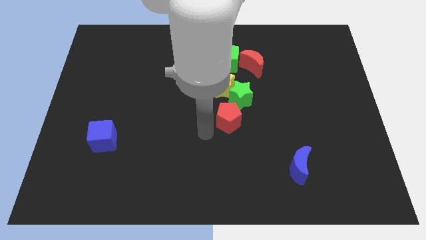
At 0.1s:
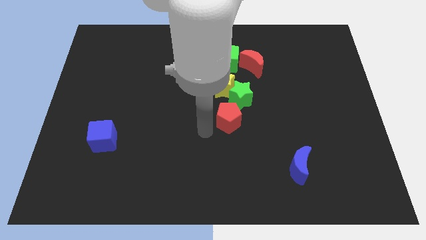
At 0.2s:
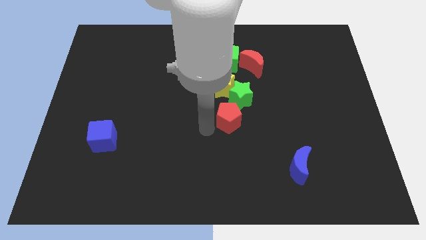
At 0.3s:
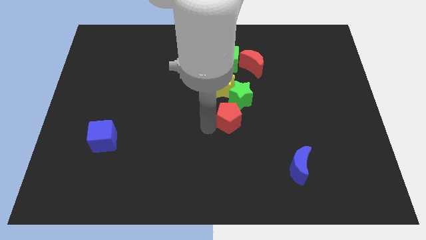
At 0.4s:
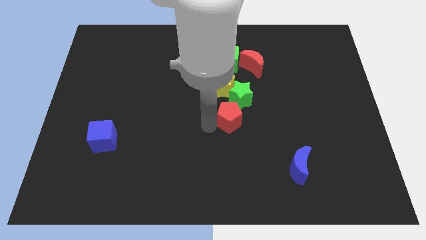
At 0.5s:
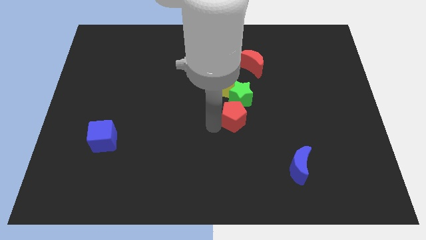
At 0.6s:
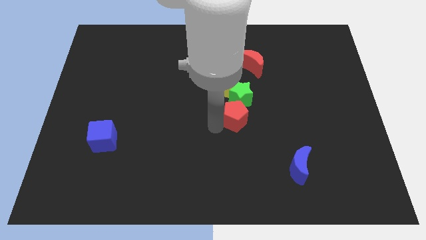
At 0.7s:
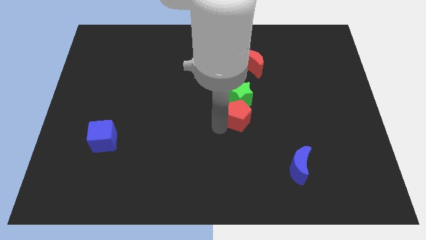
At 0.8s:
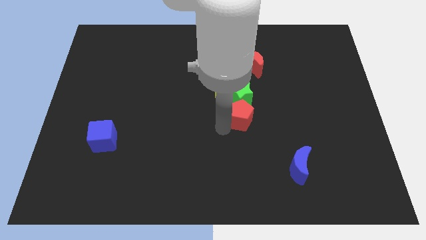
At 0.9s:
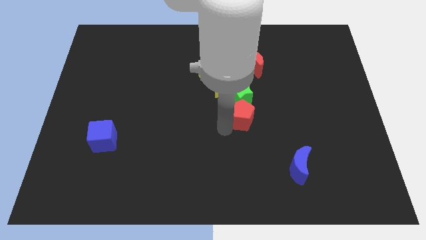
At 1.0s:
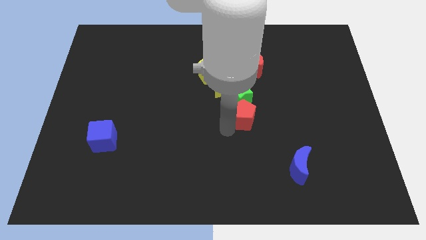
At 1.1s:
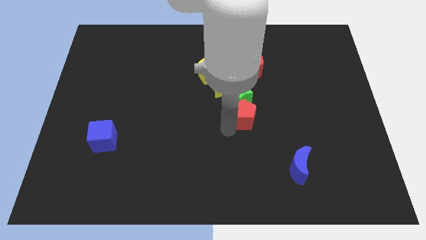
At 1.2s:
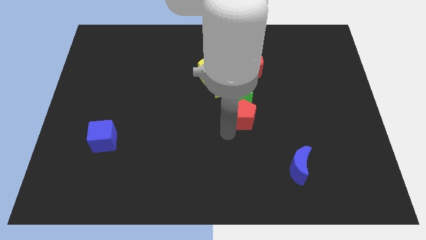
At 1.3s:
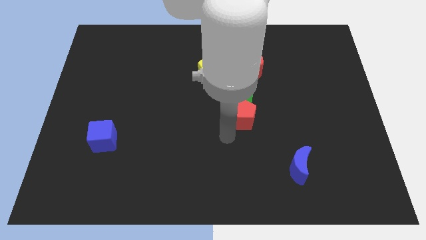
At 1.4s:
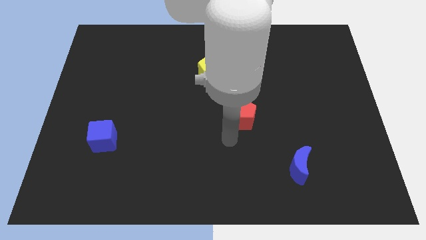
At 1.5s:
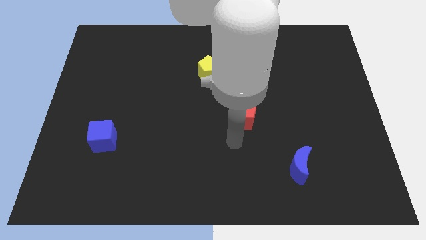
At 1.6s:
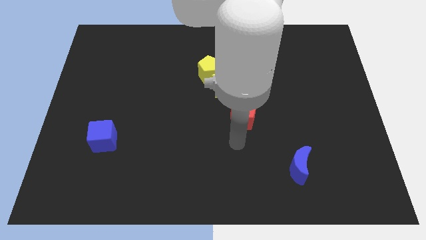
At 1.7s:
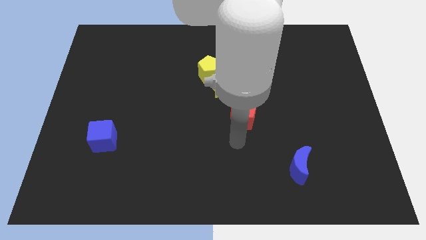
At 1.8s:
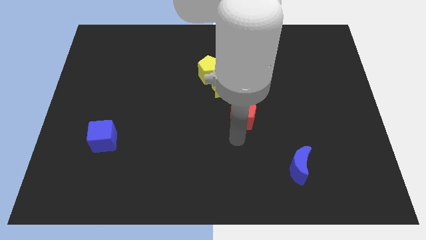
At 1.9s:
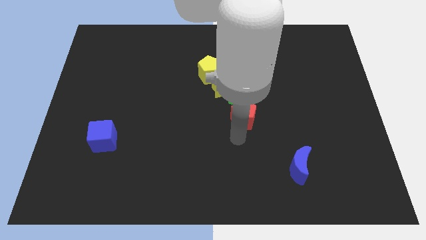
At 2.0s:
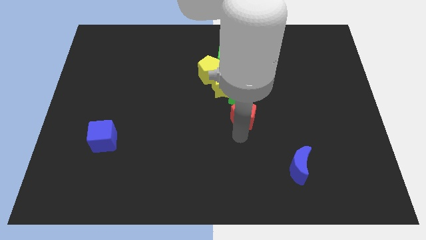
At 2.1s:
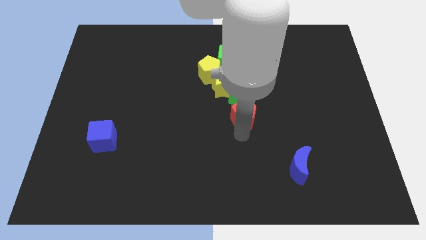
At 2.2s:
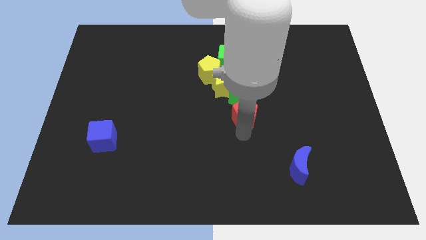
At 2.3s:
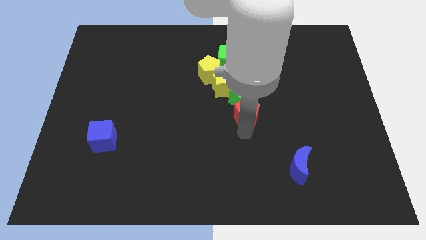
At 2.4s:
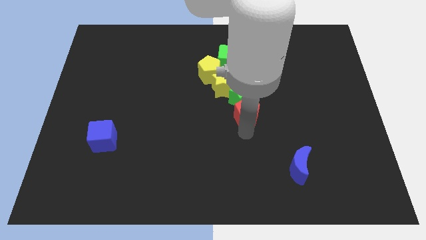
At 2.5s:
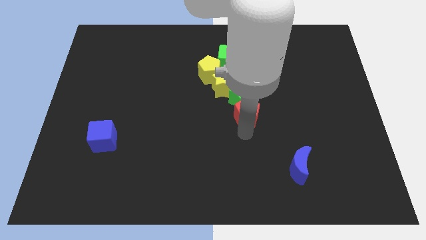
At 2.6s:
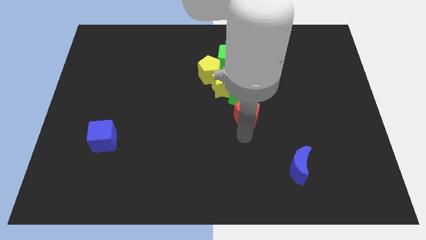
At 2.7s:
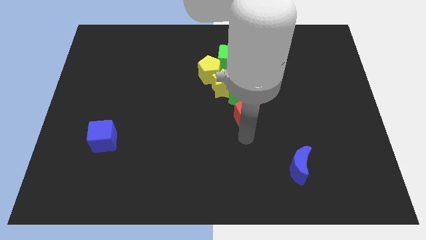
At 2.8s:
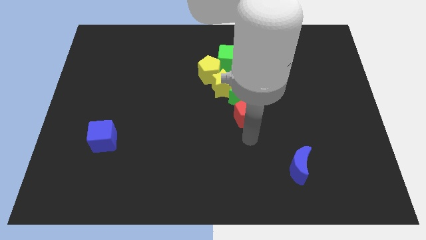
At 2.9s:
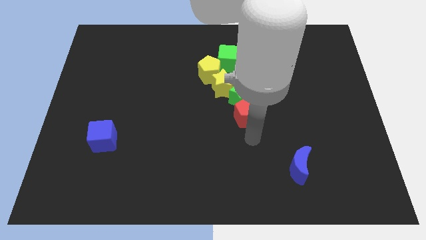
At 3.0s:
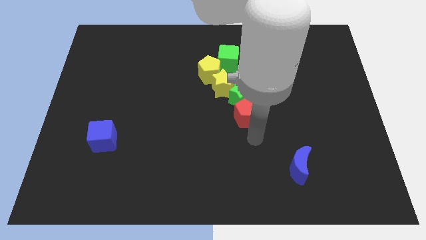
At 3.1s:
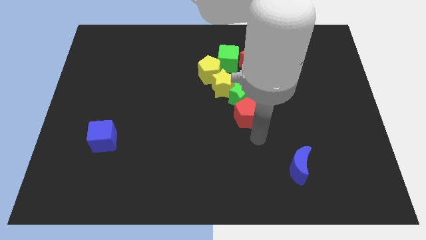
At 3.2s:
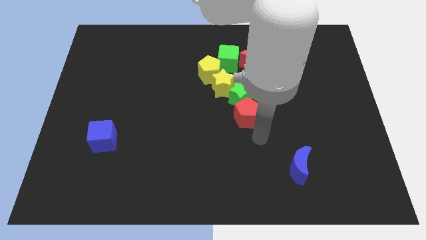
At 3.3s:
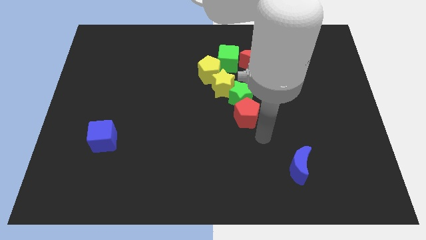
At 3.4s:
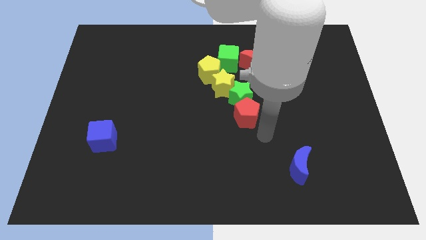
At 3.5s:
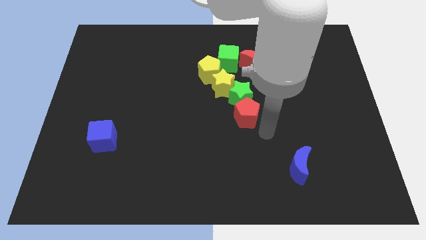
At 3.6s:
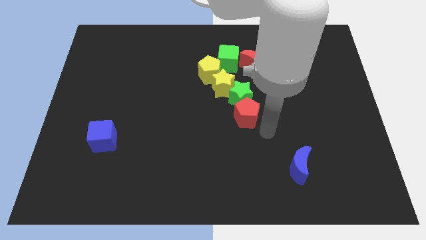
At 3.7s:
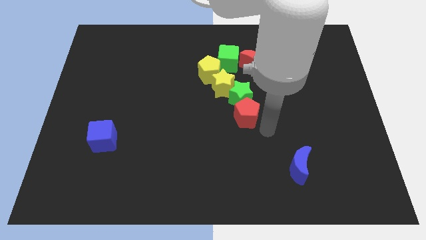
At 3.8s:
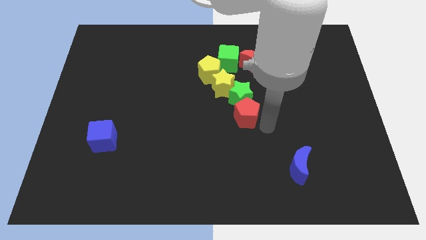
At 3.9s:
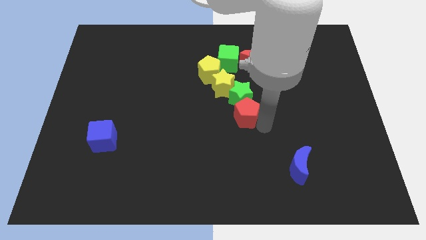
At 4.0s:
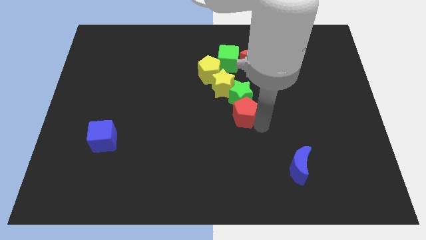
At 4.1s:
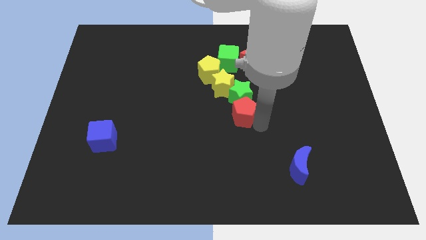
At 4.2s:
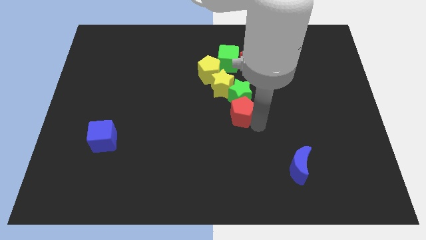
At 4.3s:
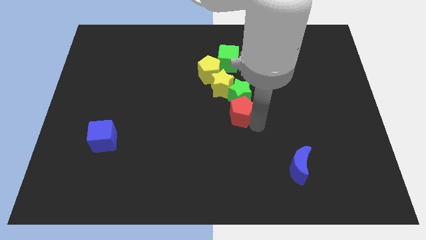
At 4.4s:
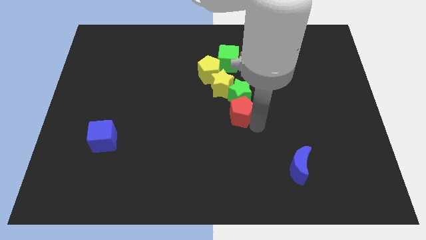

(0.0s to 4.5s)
push the red pentagon at the bottom of the green star

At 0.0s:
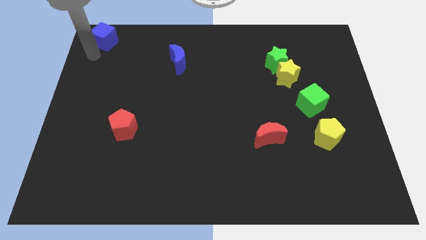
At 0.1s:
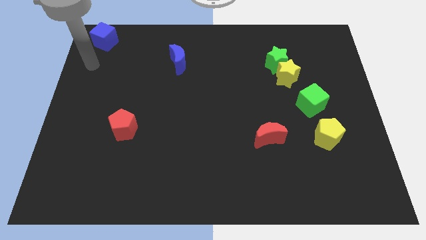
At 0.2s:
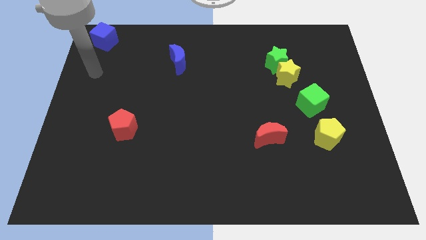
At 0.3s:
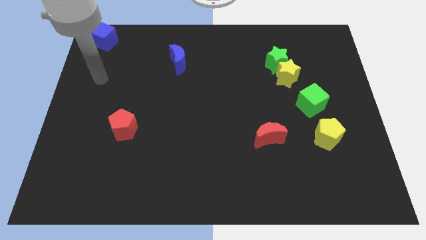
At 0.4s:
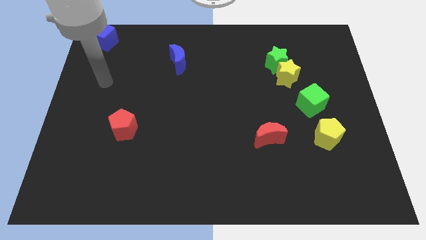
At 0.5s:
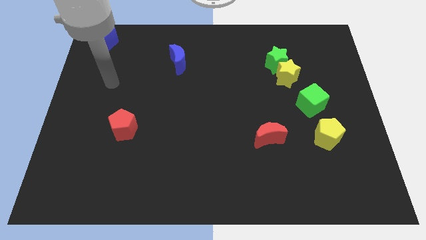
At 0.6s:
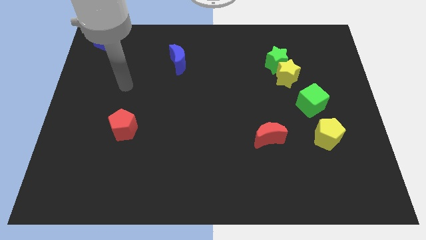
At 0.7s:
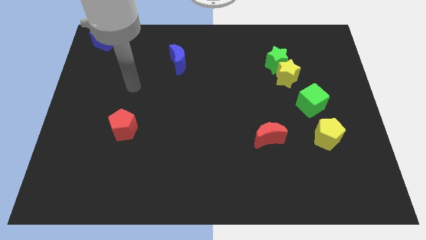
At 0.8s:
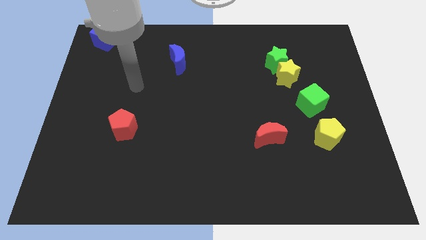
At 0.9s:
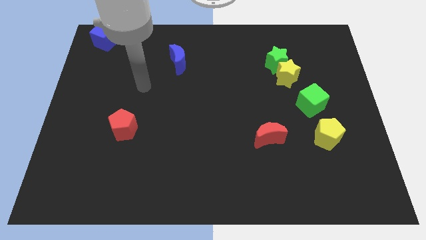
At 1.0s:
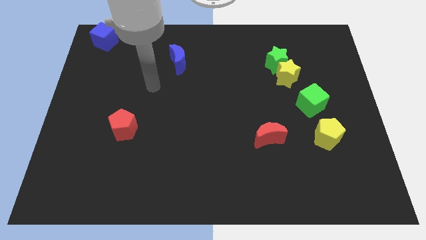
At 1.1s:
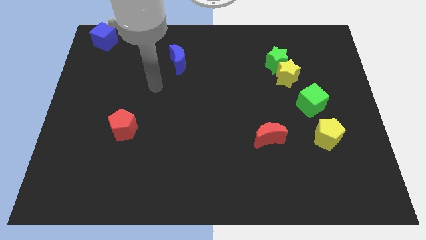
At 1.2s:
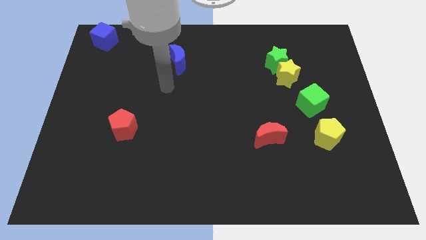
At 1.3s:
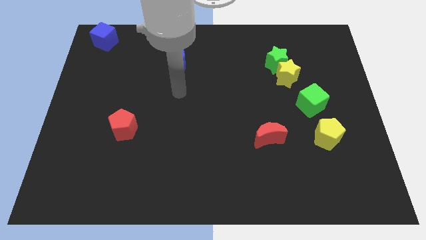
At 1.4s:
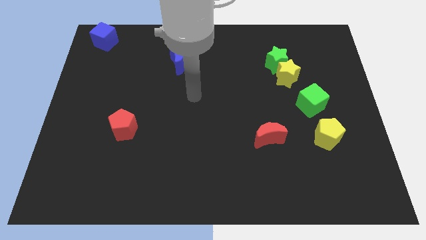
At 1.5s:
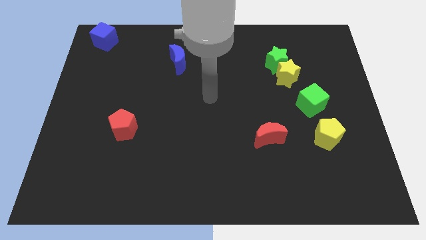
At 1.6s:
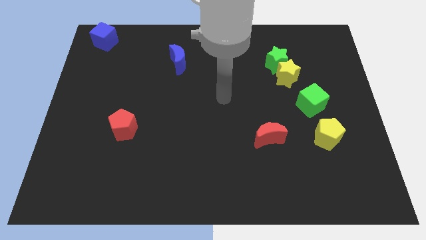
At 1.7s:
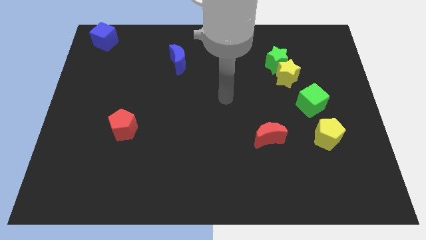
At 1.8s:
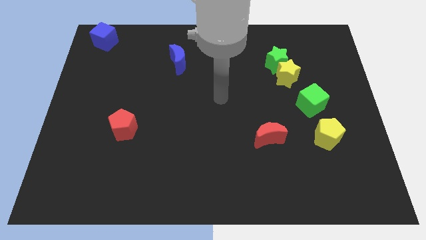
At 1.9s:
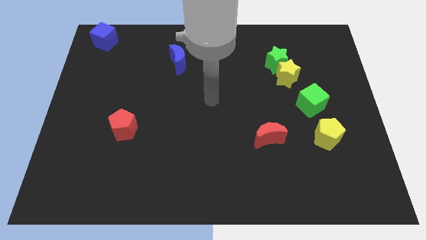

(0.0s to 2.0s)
move your arm away from the blue cube

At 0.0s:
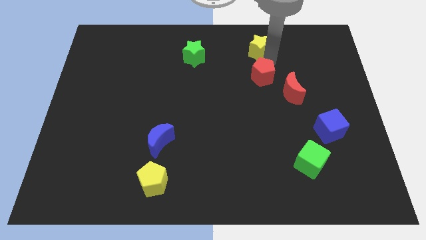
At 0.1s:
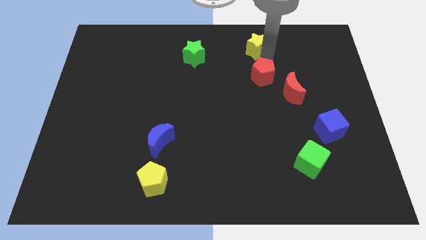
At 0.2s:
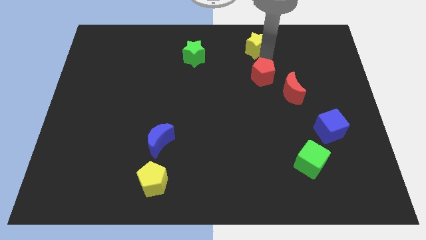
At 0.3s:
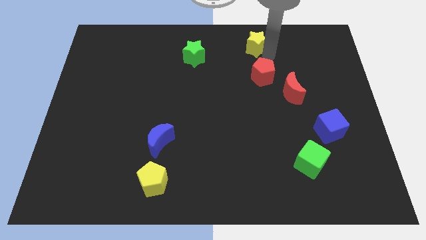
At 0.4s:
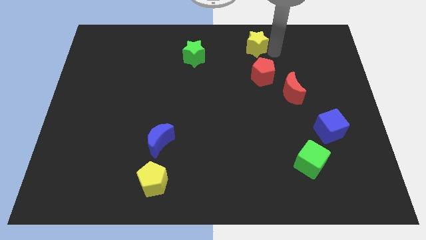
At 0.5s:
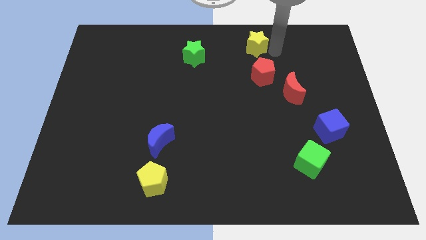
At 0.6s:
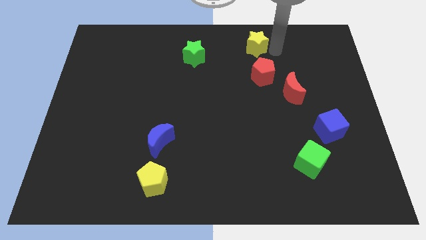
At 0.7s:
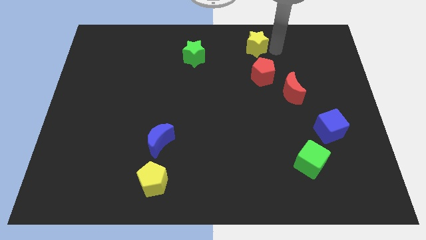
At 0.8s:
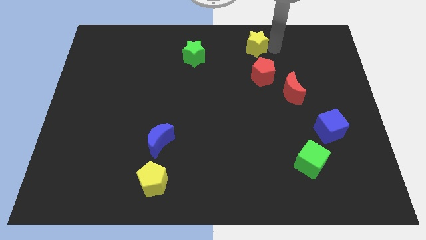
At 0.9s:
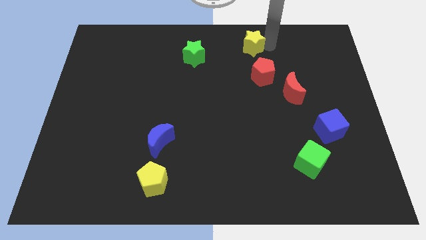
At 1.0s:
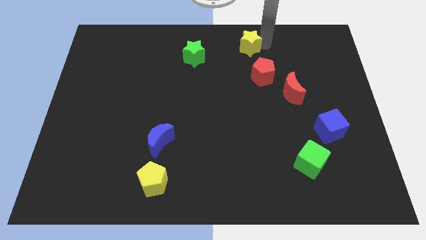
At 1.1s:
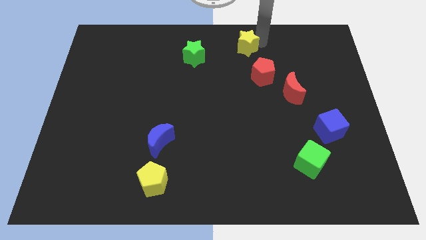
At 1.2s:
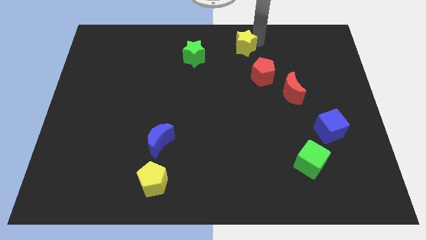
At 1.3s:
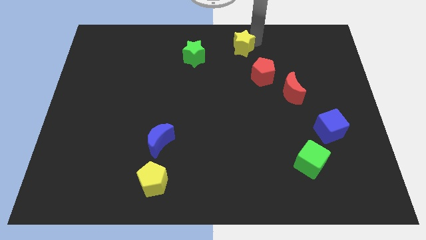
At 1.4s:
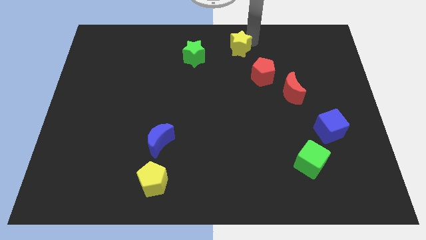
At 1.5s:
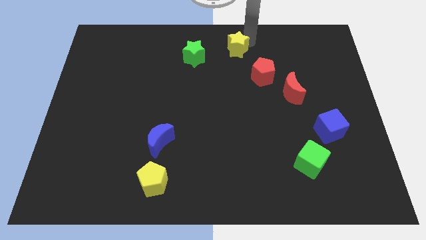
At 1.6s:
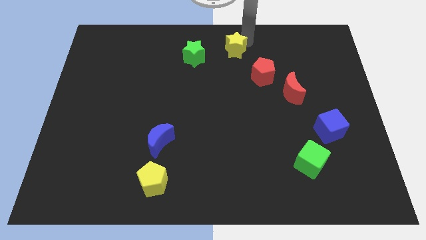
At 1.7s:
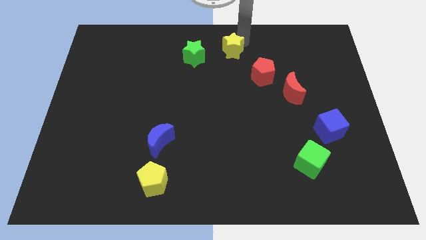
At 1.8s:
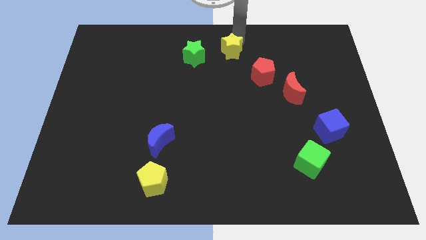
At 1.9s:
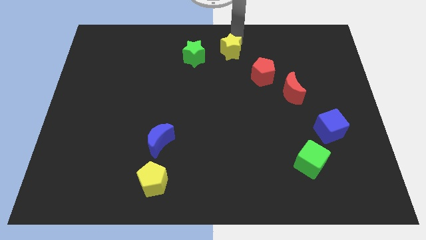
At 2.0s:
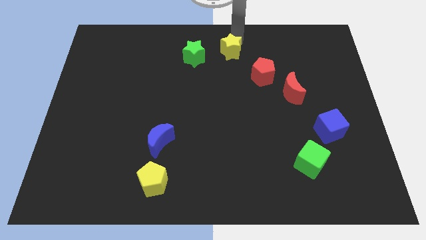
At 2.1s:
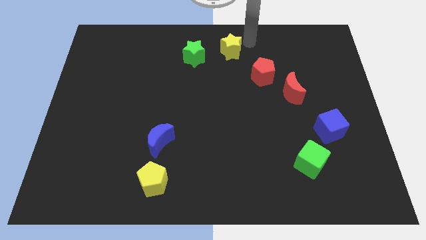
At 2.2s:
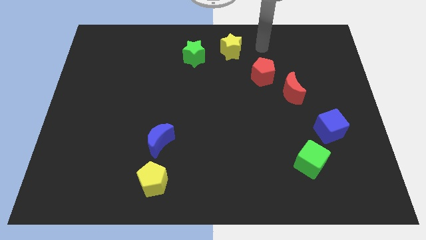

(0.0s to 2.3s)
move the yellow star towards the green star
